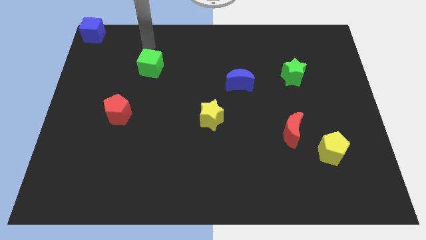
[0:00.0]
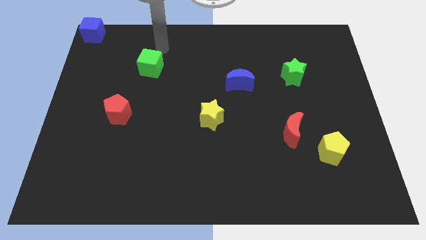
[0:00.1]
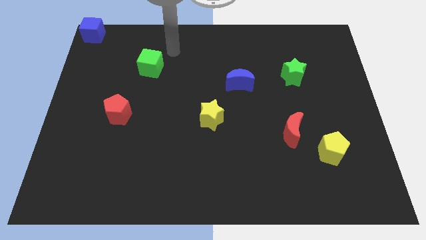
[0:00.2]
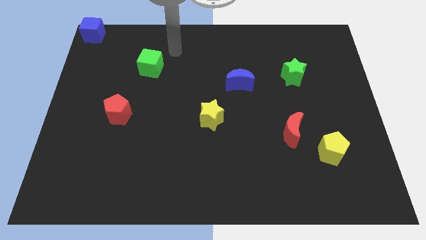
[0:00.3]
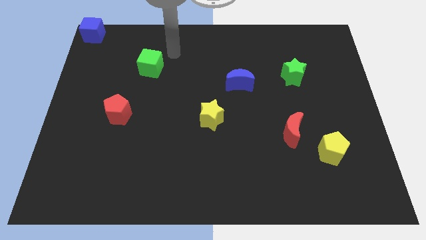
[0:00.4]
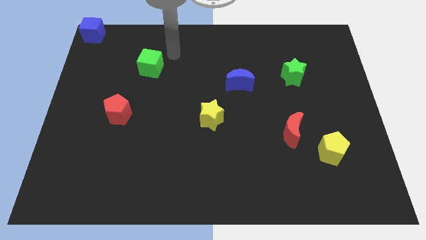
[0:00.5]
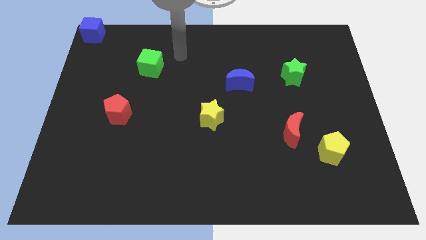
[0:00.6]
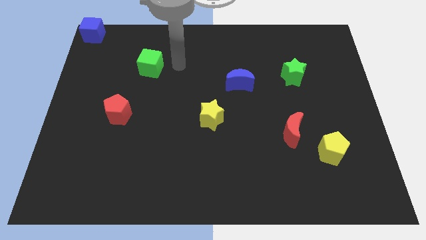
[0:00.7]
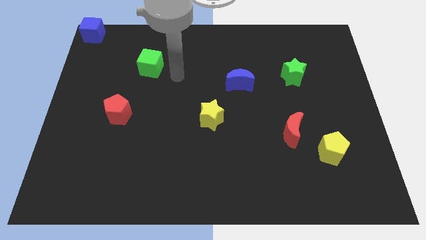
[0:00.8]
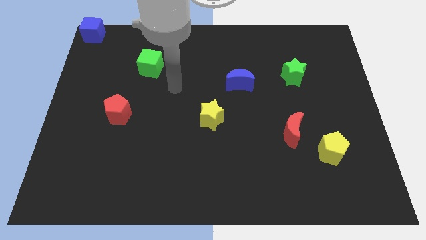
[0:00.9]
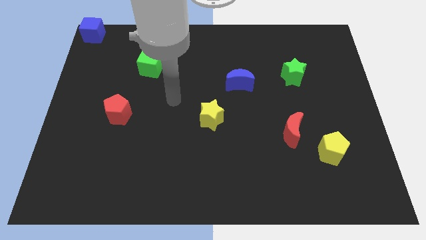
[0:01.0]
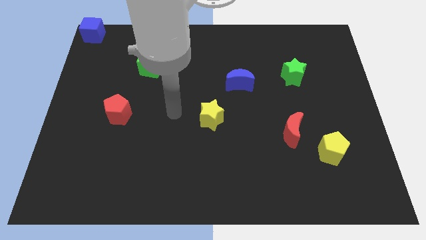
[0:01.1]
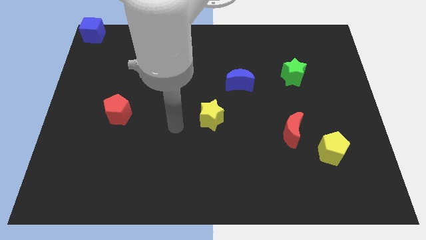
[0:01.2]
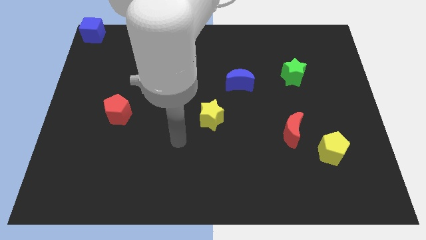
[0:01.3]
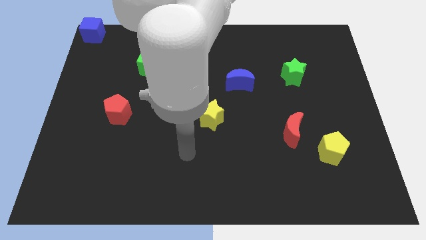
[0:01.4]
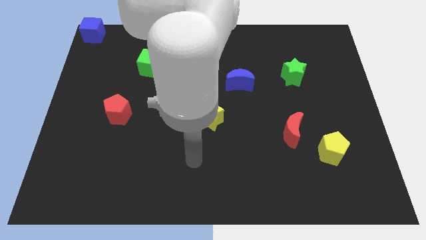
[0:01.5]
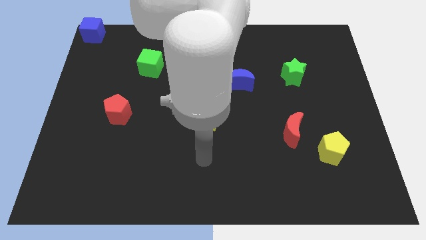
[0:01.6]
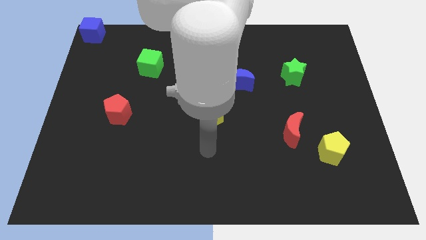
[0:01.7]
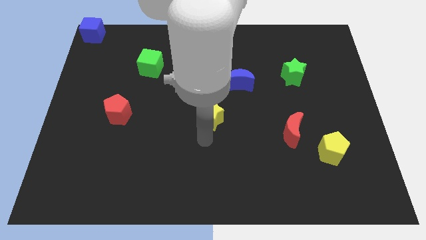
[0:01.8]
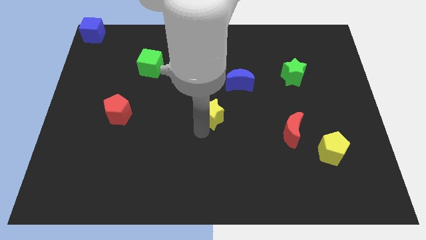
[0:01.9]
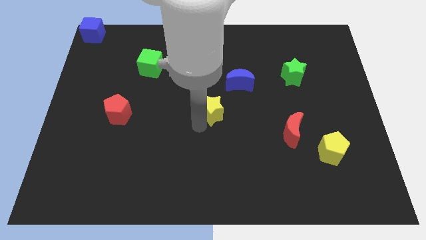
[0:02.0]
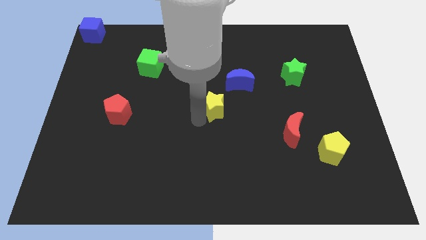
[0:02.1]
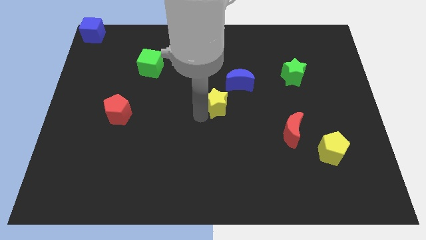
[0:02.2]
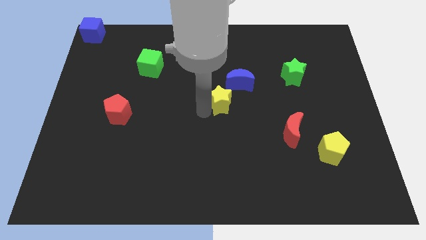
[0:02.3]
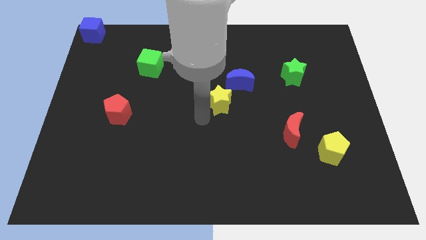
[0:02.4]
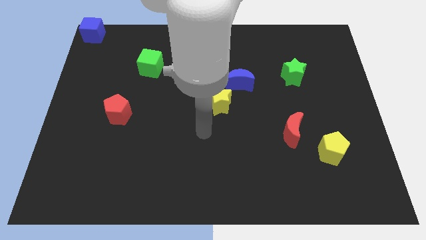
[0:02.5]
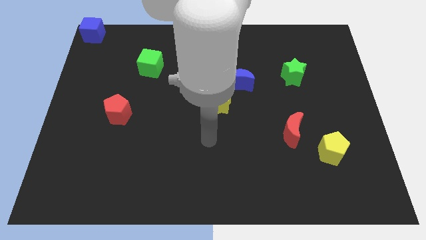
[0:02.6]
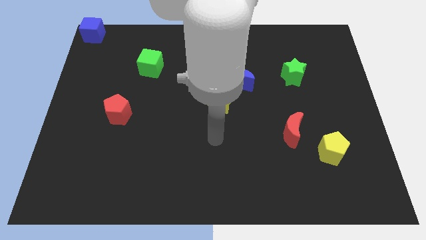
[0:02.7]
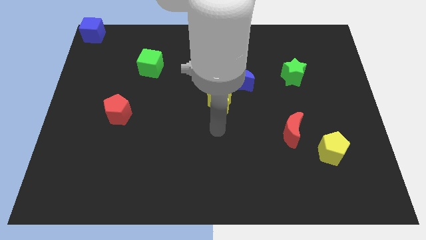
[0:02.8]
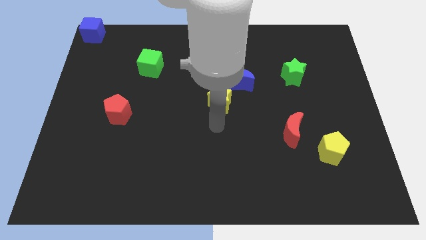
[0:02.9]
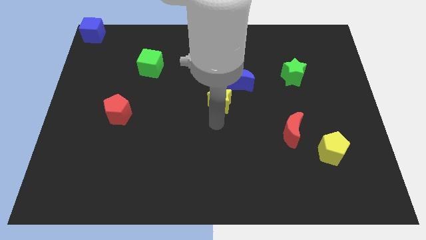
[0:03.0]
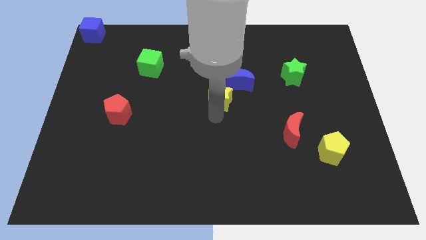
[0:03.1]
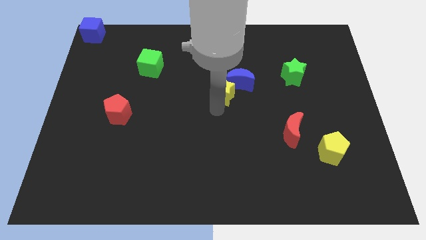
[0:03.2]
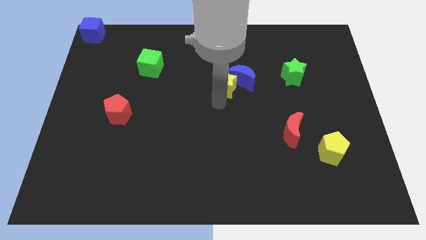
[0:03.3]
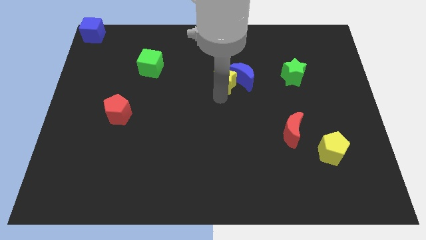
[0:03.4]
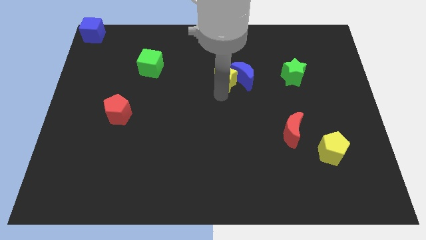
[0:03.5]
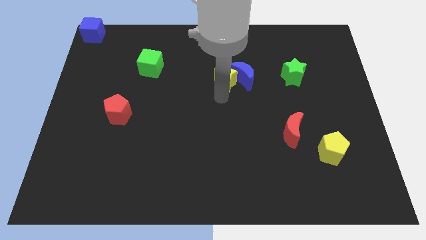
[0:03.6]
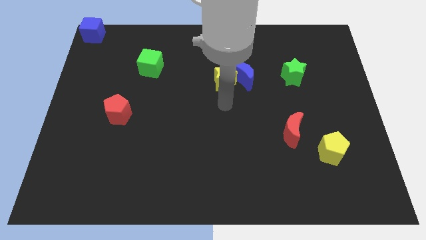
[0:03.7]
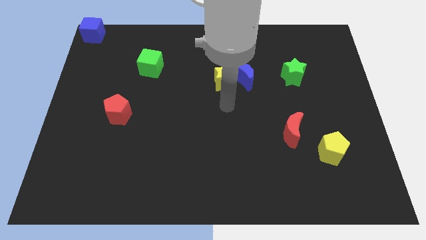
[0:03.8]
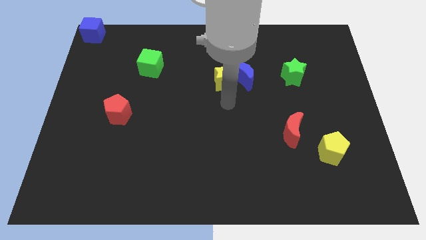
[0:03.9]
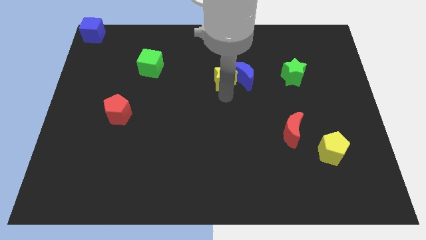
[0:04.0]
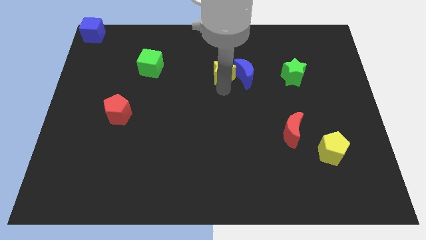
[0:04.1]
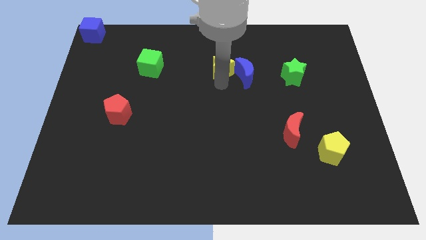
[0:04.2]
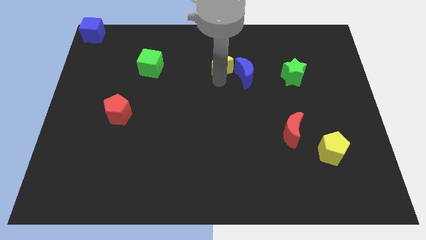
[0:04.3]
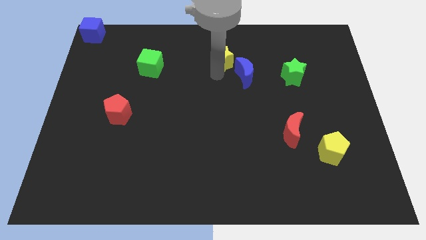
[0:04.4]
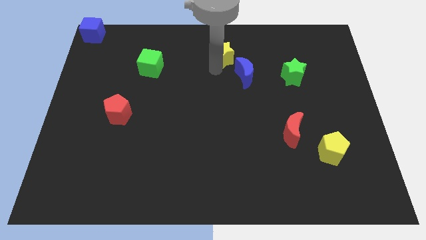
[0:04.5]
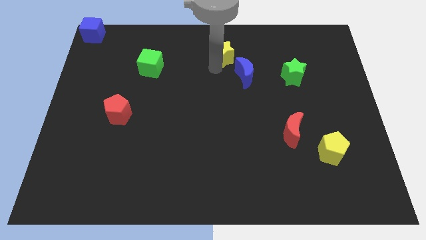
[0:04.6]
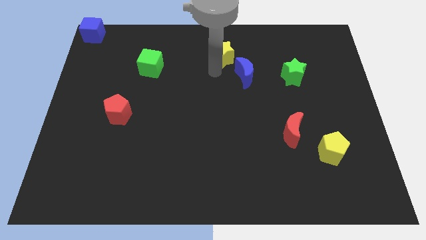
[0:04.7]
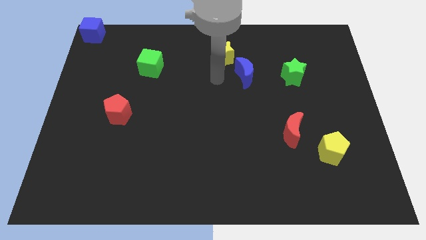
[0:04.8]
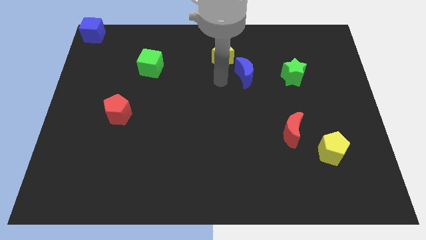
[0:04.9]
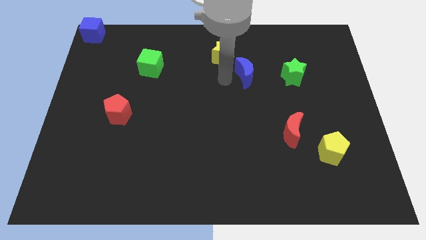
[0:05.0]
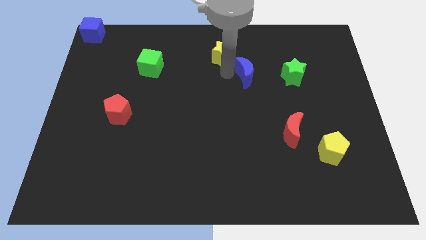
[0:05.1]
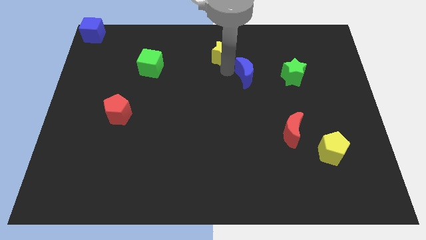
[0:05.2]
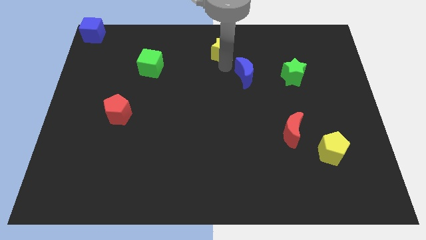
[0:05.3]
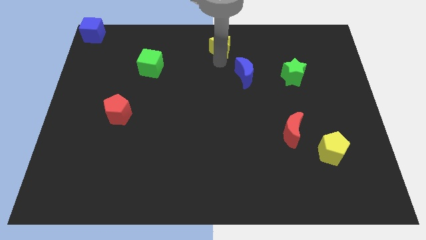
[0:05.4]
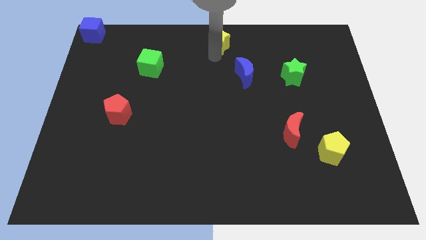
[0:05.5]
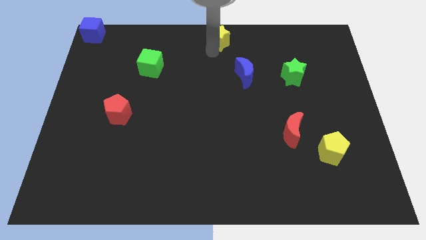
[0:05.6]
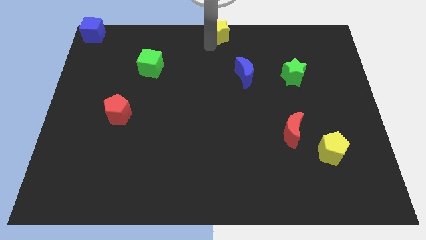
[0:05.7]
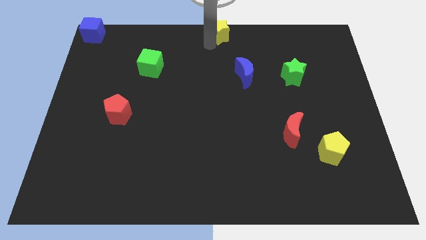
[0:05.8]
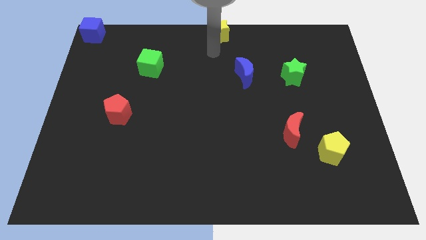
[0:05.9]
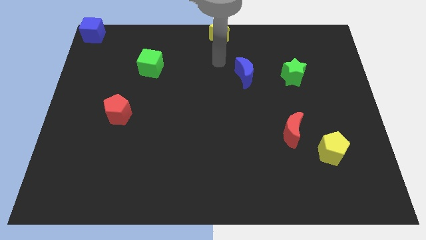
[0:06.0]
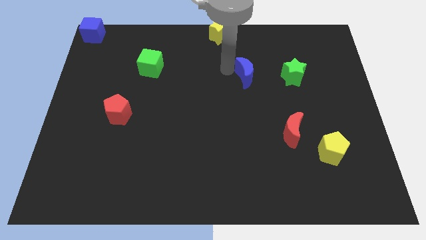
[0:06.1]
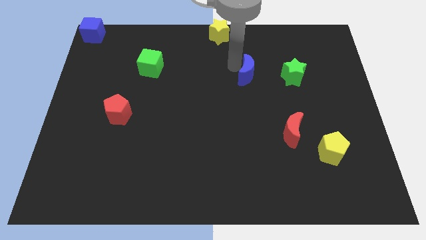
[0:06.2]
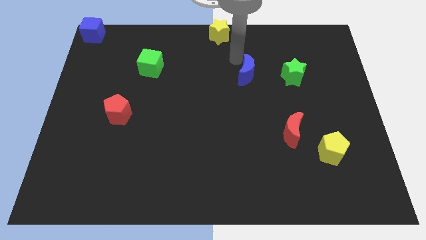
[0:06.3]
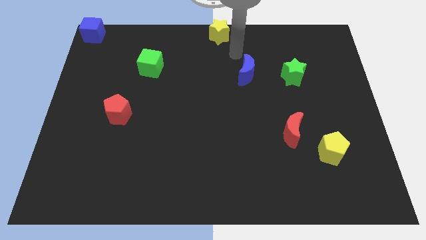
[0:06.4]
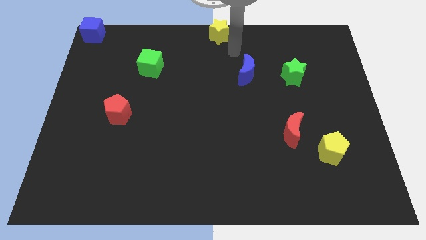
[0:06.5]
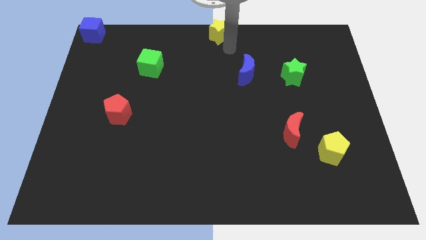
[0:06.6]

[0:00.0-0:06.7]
place the yellow star at the top center of the board

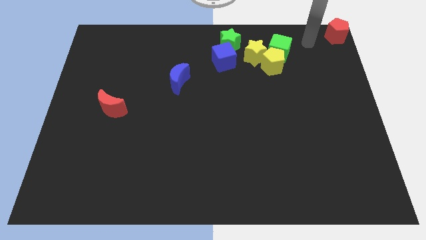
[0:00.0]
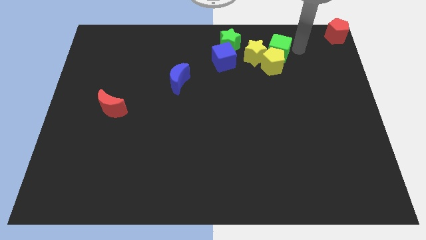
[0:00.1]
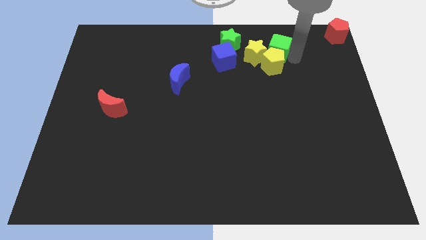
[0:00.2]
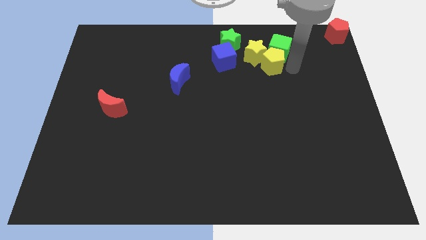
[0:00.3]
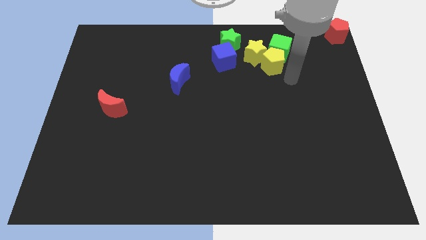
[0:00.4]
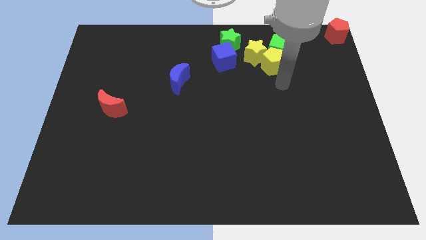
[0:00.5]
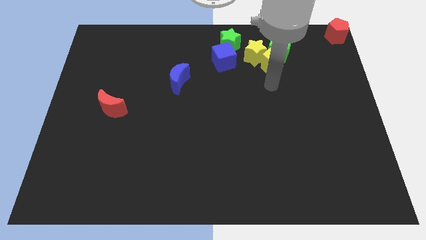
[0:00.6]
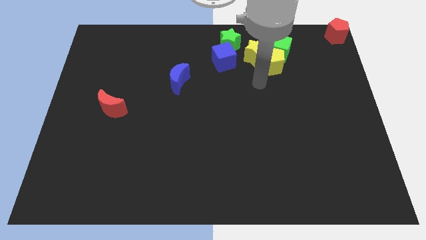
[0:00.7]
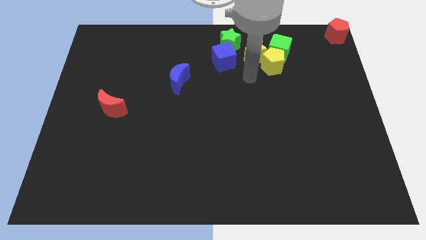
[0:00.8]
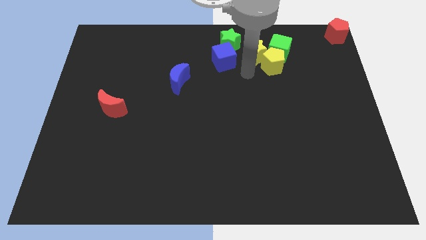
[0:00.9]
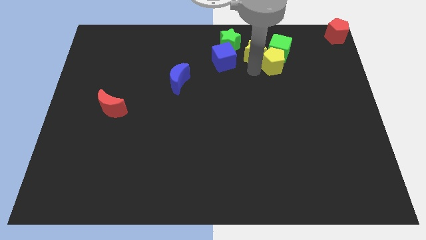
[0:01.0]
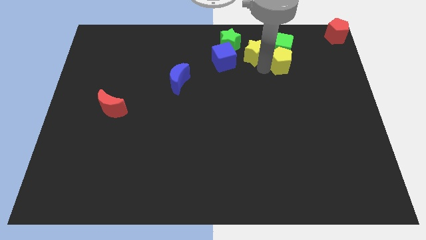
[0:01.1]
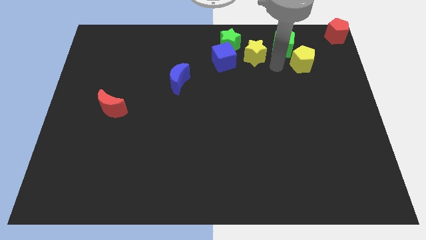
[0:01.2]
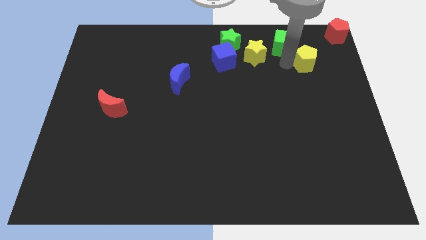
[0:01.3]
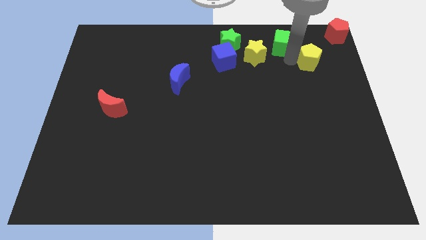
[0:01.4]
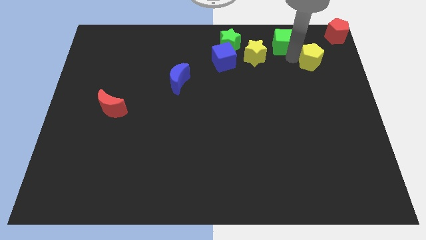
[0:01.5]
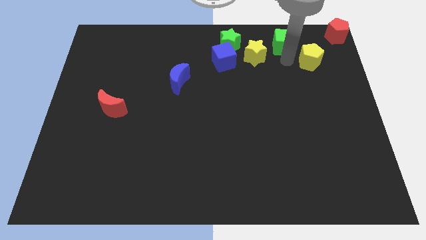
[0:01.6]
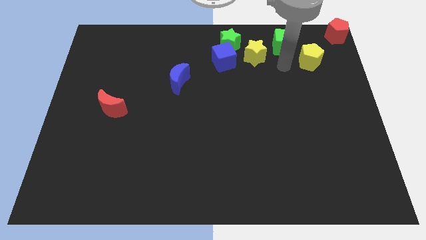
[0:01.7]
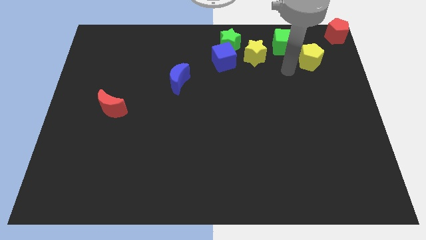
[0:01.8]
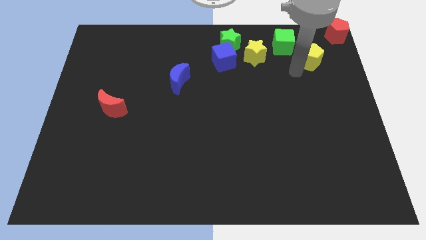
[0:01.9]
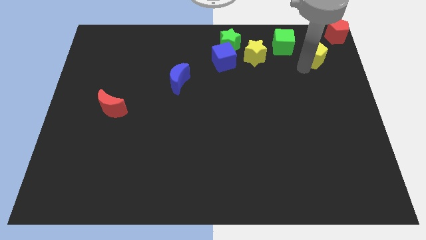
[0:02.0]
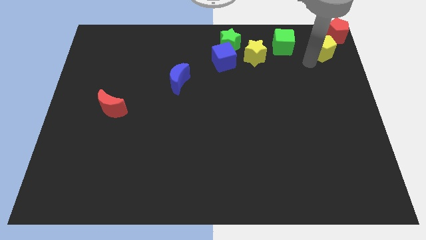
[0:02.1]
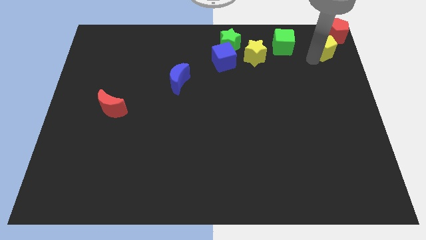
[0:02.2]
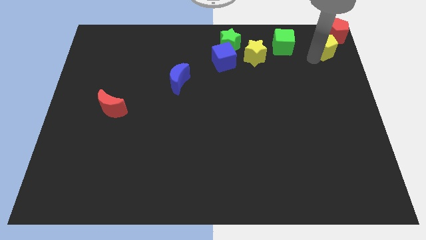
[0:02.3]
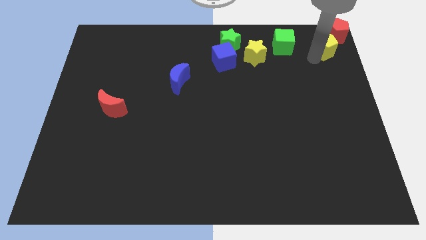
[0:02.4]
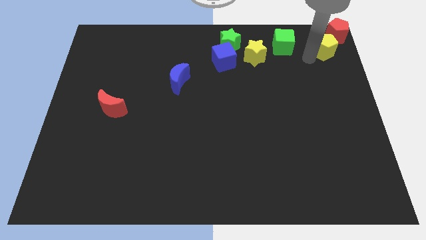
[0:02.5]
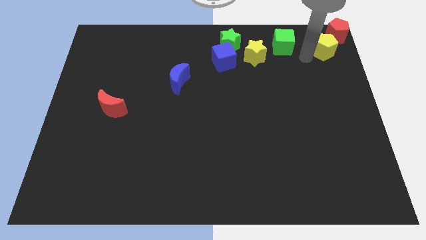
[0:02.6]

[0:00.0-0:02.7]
move the yellow pentagon diagonally below the red pentagon
